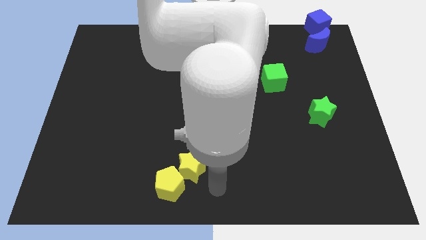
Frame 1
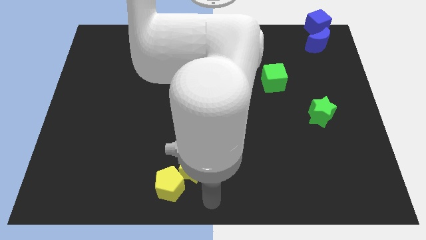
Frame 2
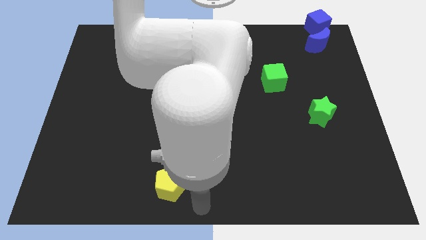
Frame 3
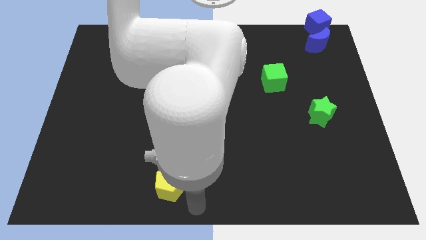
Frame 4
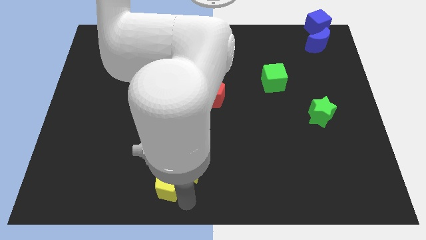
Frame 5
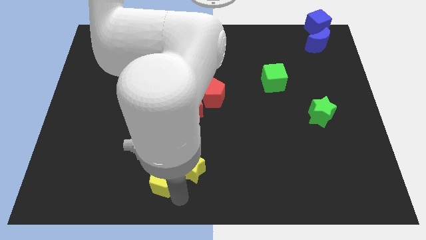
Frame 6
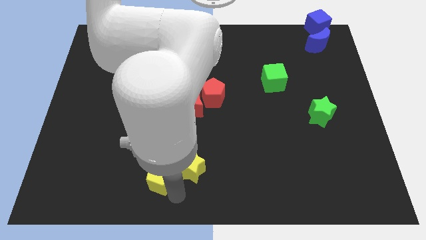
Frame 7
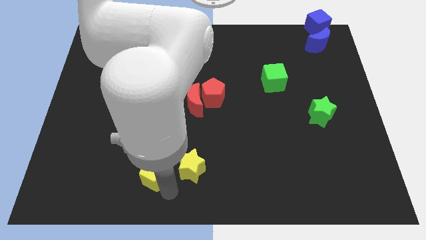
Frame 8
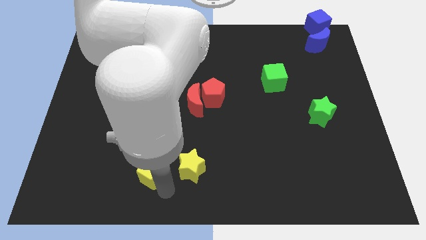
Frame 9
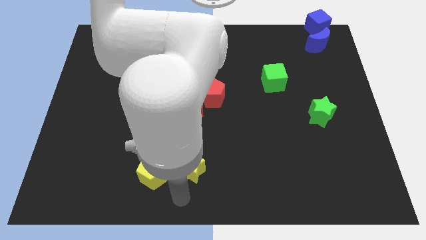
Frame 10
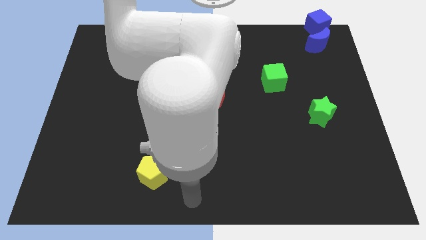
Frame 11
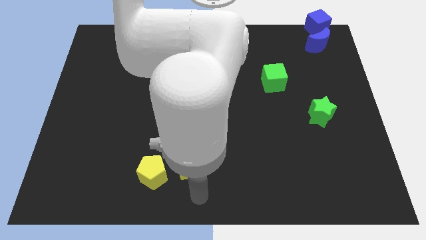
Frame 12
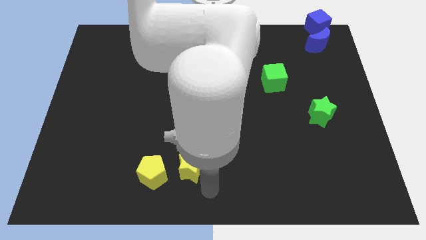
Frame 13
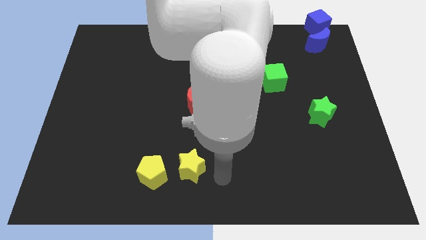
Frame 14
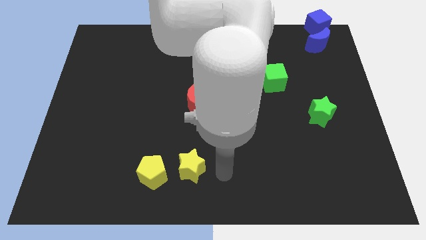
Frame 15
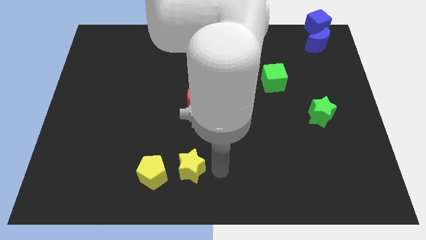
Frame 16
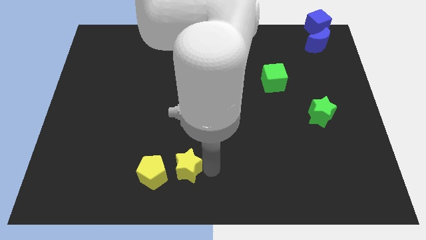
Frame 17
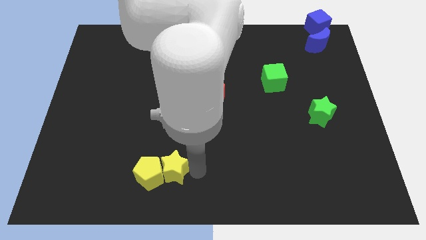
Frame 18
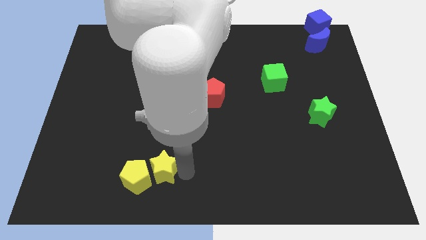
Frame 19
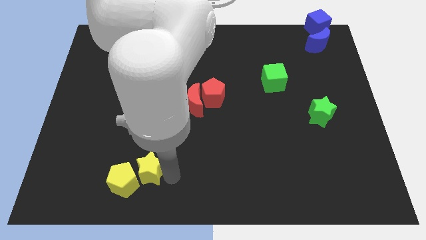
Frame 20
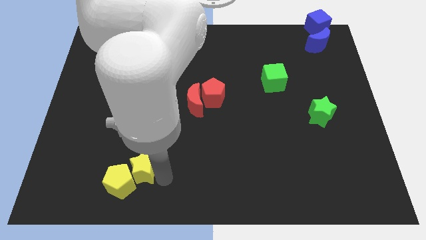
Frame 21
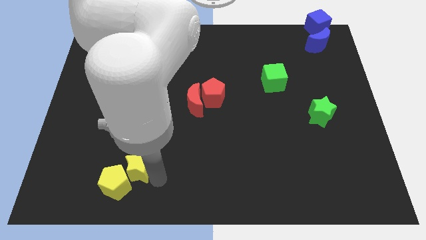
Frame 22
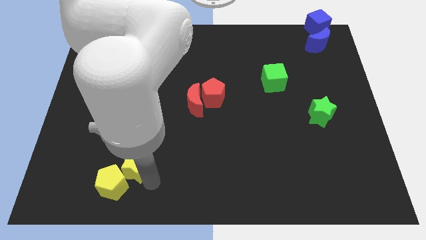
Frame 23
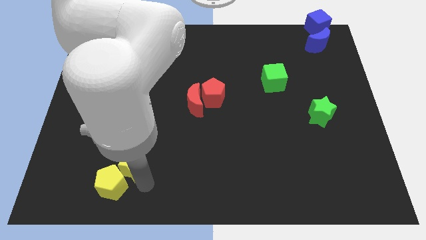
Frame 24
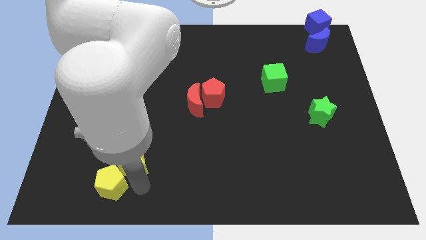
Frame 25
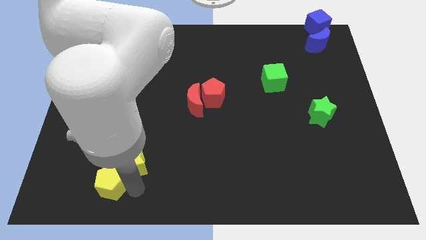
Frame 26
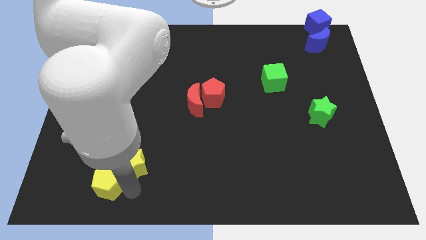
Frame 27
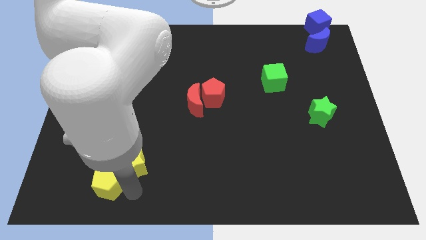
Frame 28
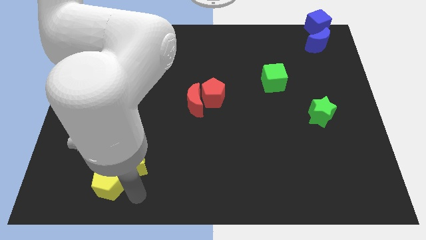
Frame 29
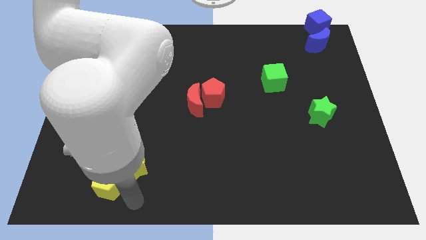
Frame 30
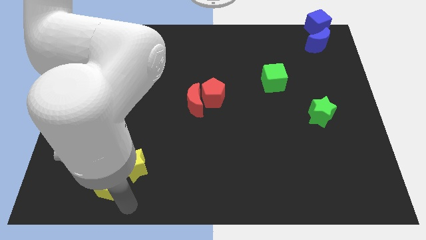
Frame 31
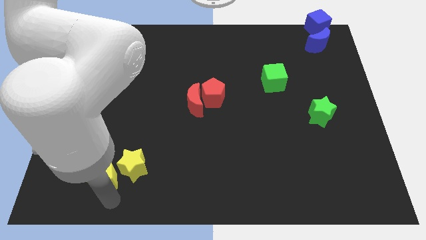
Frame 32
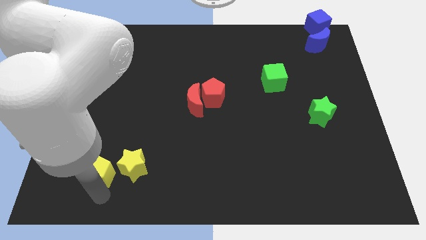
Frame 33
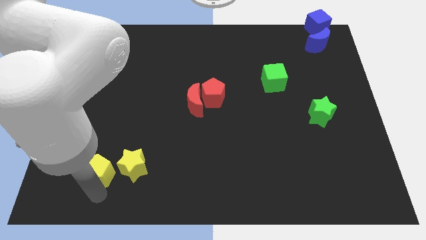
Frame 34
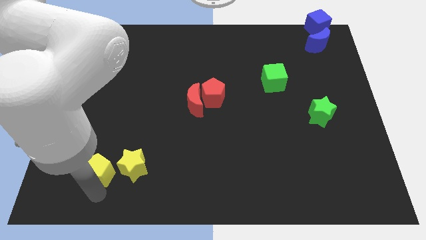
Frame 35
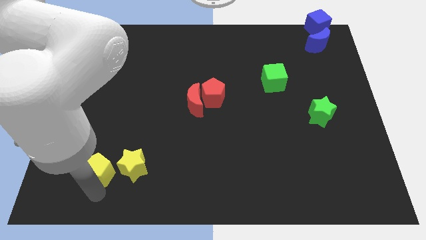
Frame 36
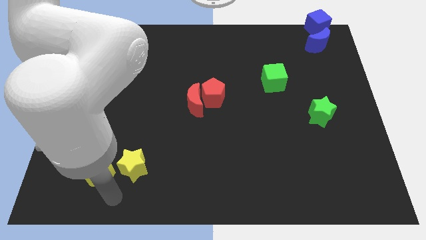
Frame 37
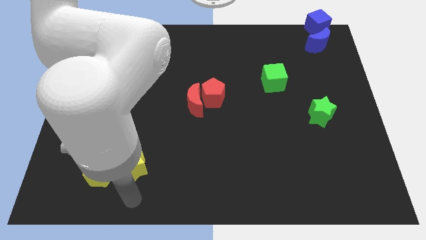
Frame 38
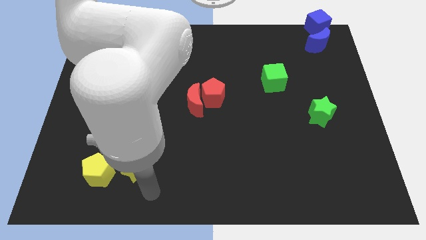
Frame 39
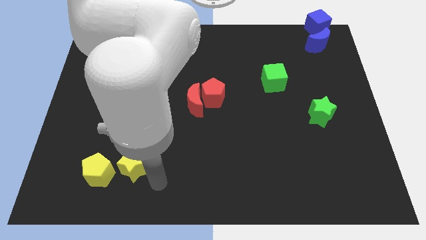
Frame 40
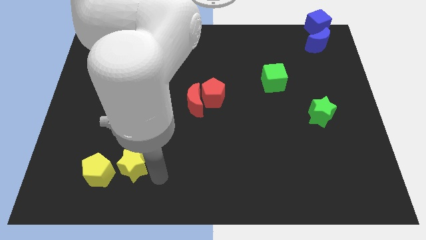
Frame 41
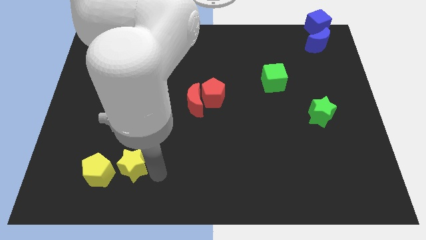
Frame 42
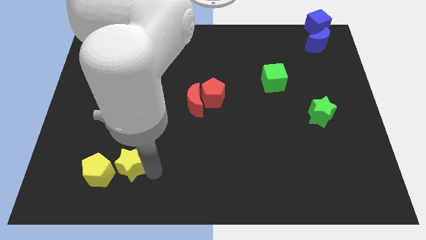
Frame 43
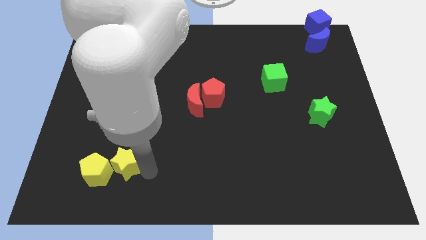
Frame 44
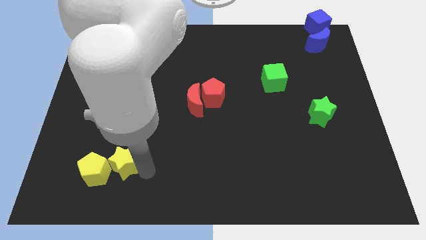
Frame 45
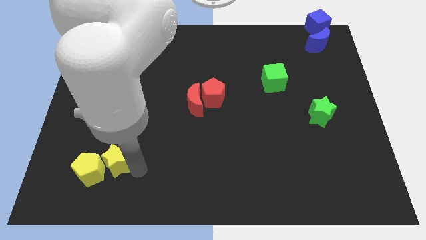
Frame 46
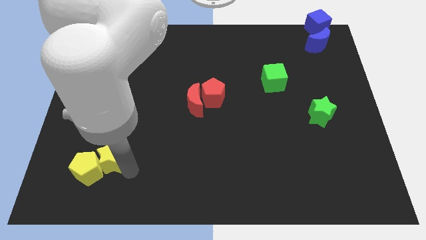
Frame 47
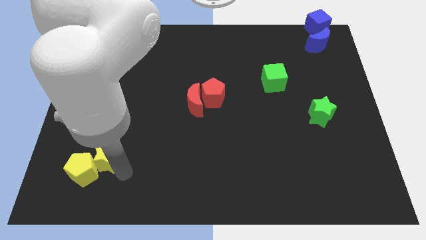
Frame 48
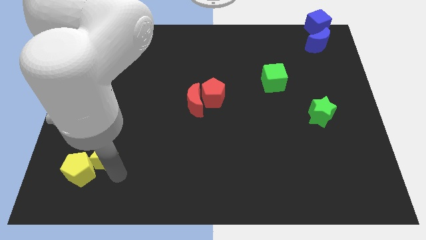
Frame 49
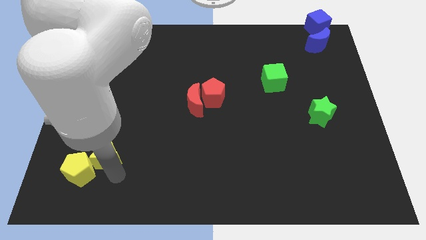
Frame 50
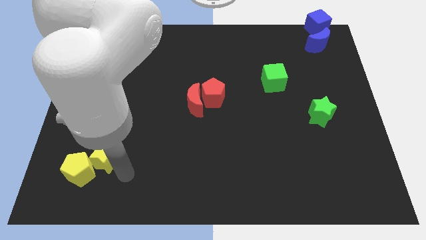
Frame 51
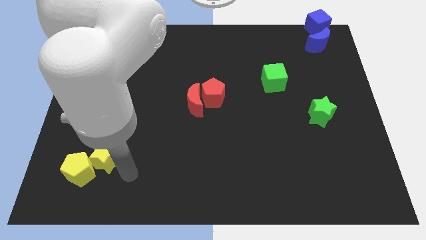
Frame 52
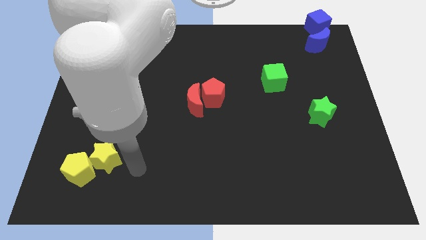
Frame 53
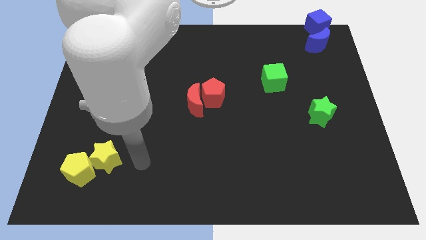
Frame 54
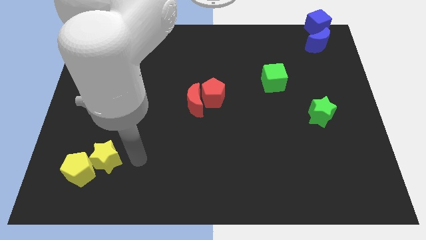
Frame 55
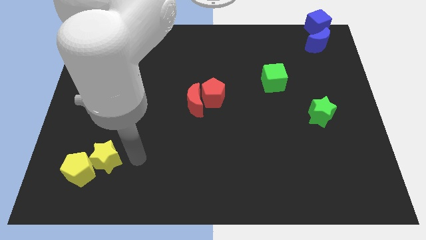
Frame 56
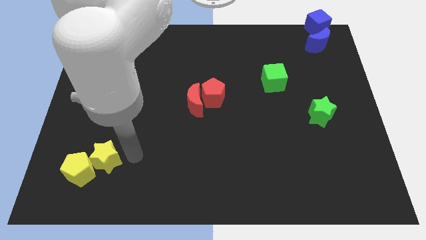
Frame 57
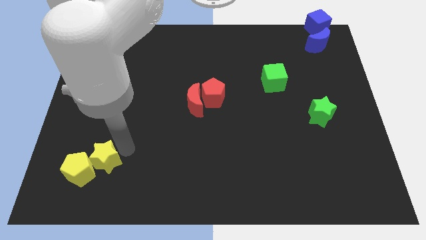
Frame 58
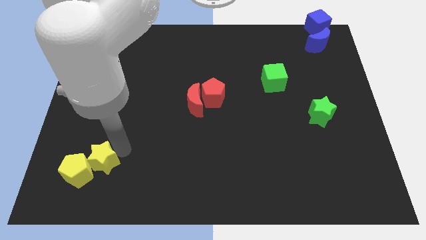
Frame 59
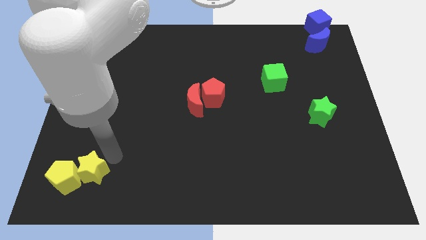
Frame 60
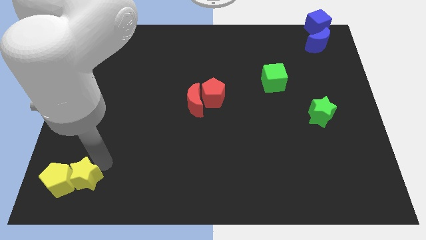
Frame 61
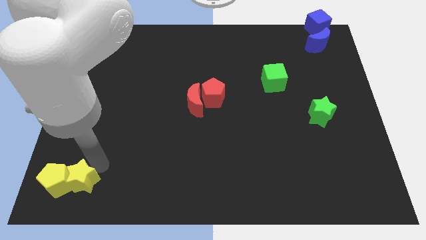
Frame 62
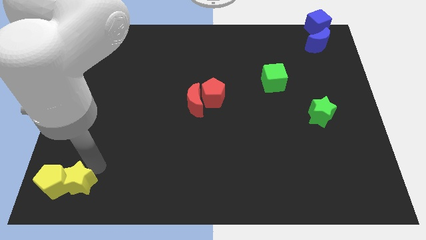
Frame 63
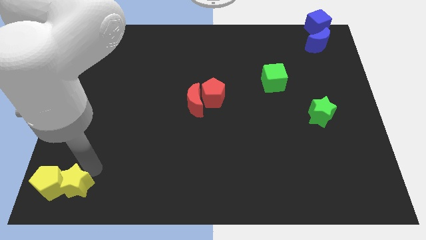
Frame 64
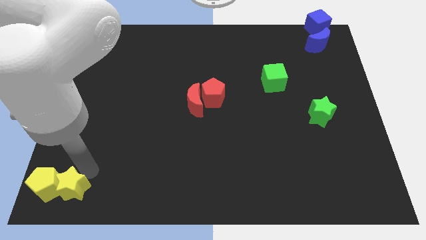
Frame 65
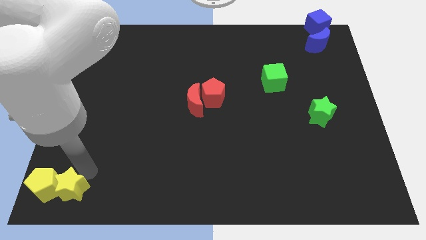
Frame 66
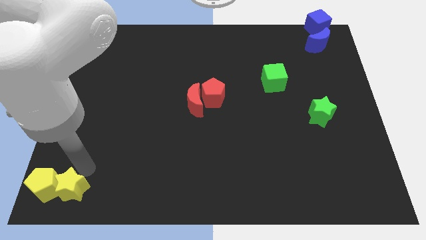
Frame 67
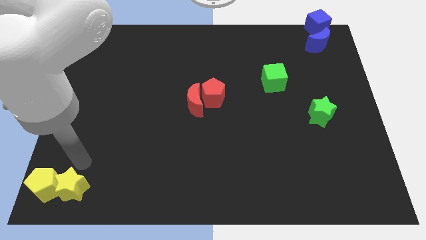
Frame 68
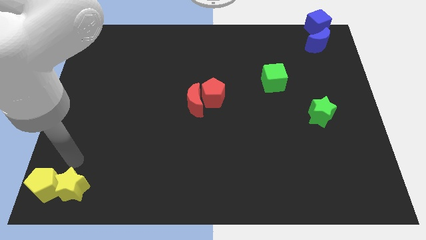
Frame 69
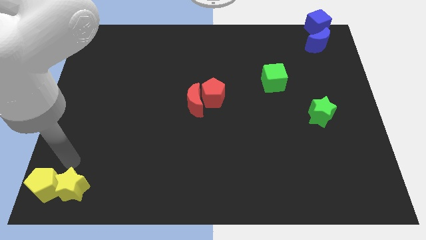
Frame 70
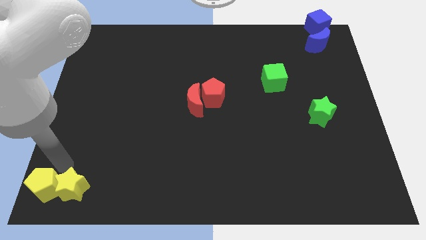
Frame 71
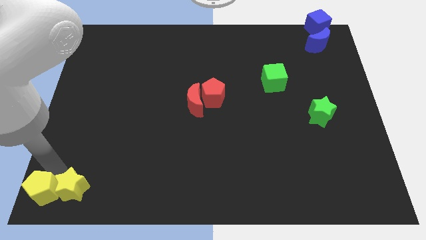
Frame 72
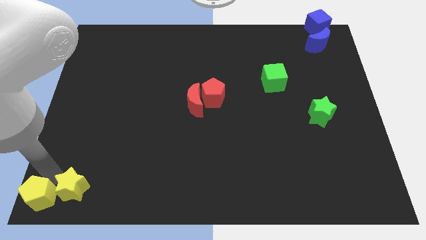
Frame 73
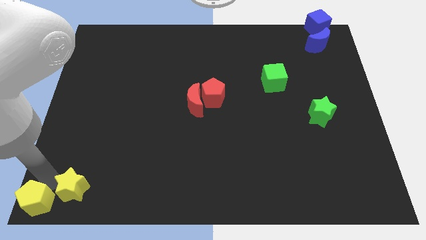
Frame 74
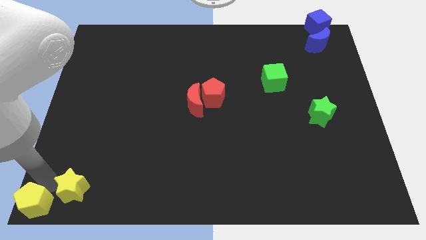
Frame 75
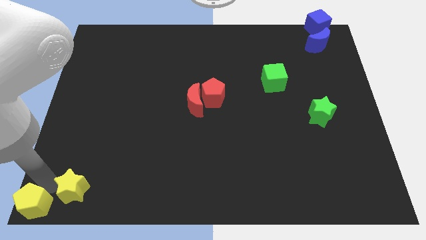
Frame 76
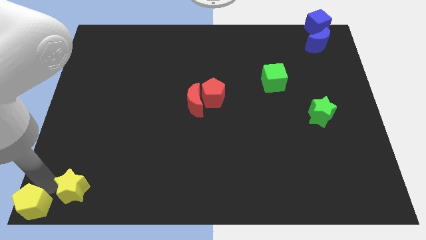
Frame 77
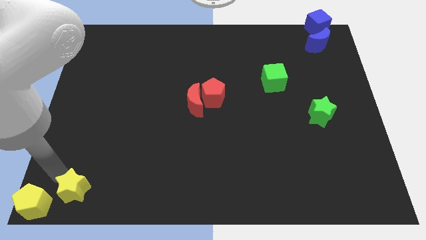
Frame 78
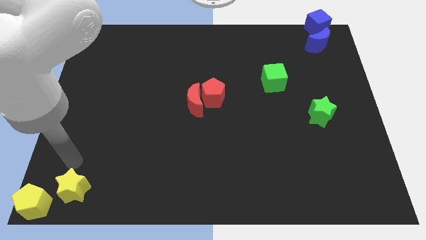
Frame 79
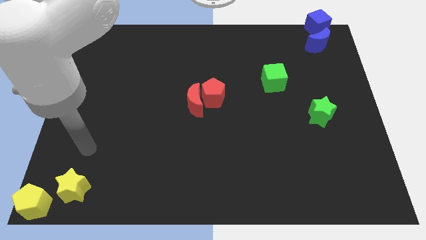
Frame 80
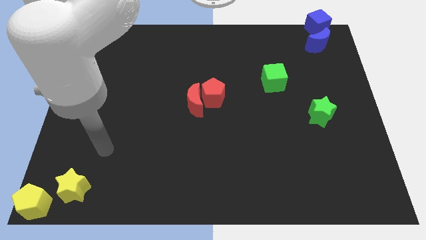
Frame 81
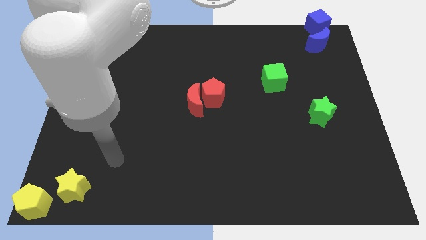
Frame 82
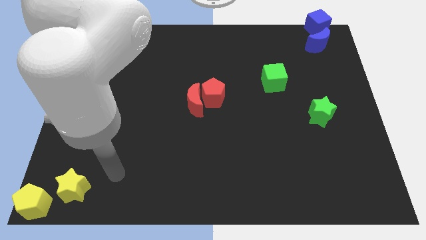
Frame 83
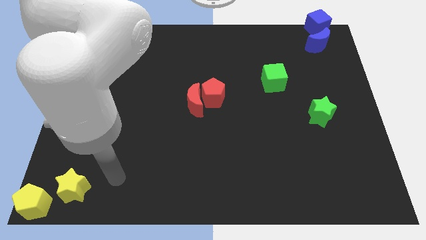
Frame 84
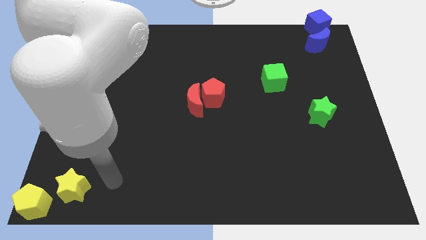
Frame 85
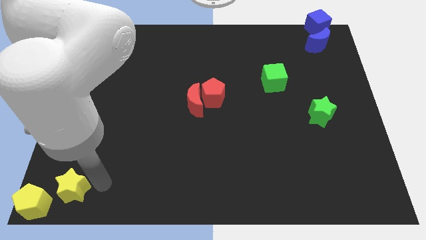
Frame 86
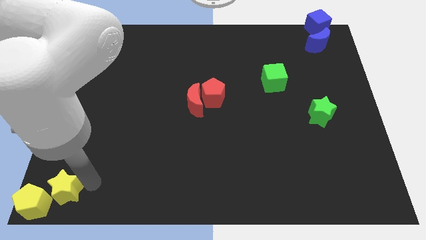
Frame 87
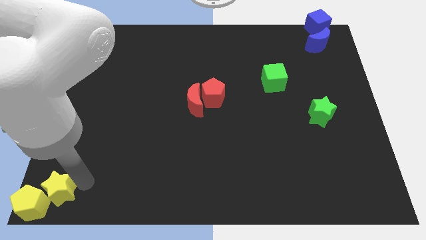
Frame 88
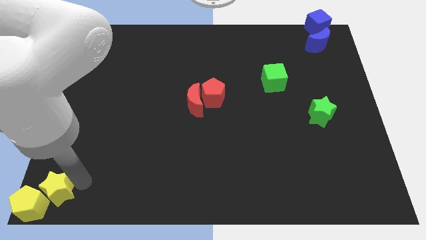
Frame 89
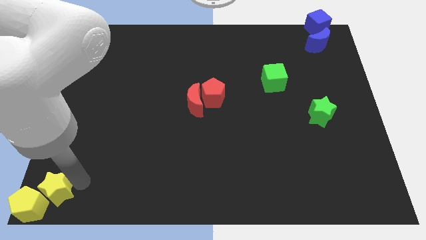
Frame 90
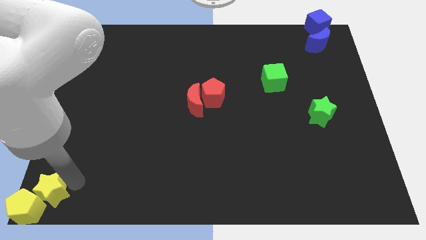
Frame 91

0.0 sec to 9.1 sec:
move yellow blocks to the bottom left corner
